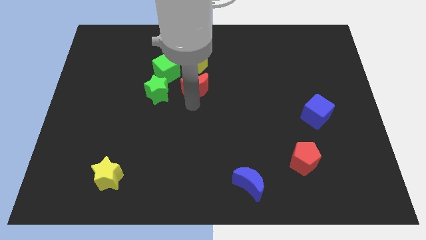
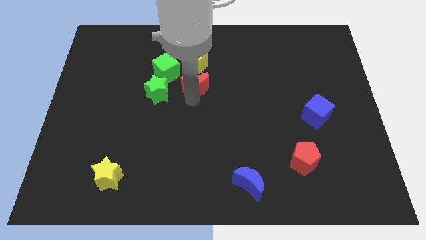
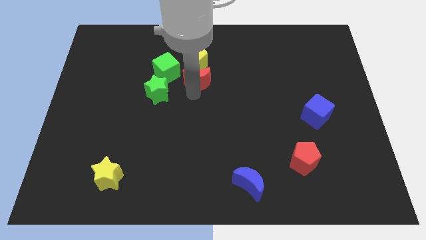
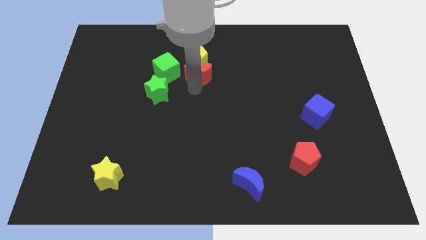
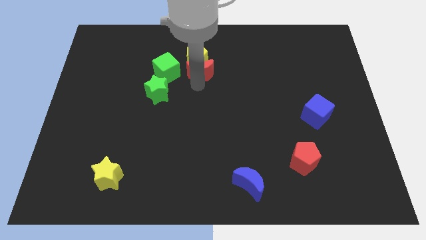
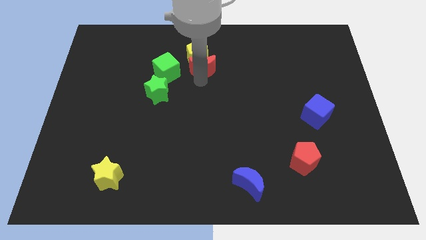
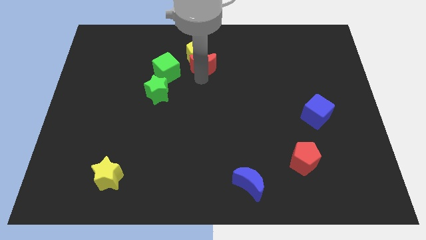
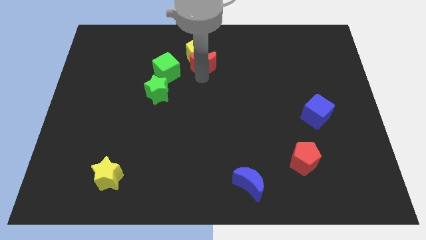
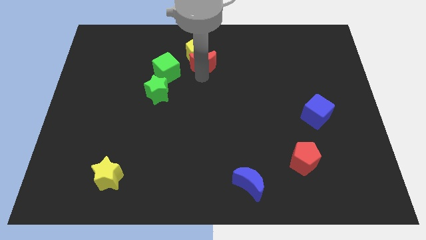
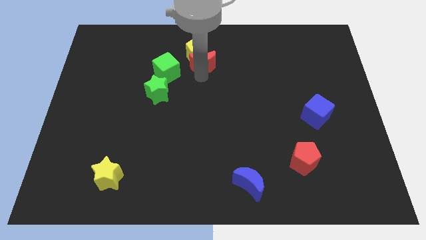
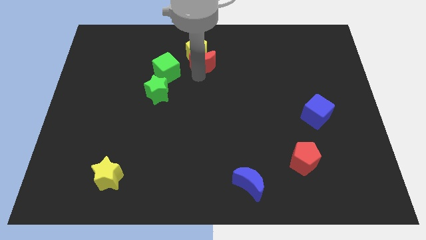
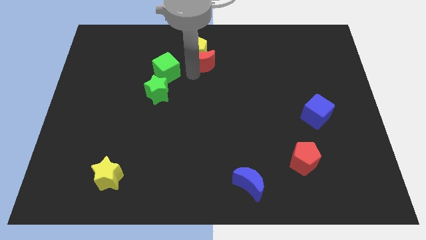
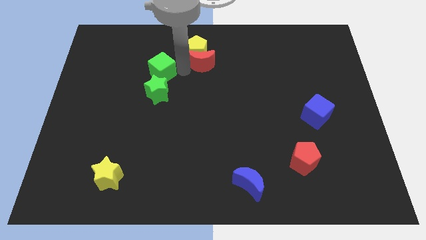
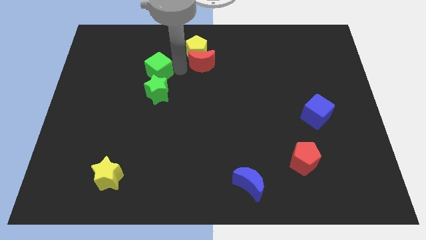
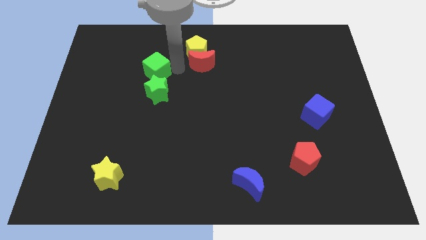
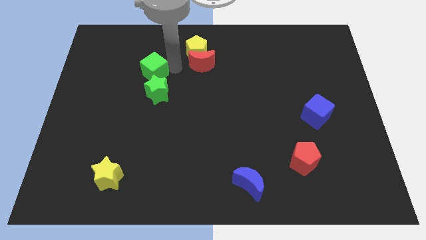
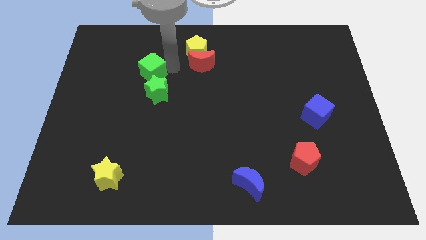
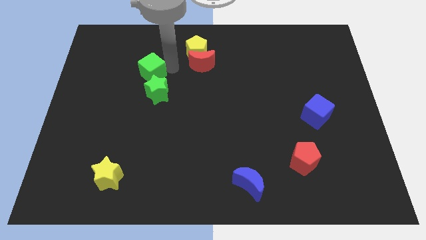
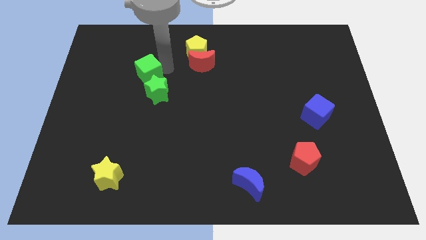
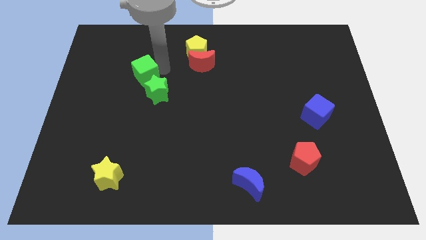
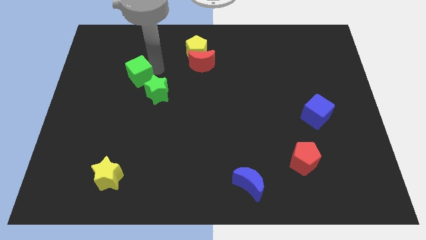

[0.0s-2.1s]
move the red moon and yellow pentagon at the top center

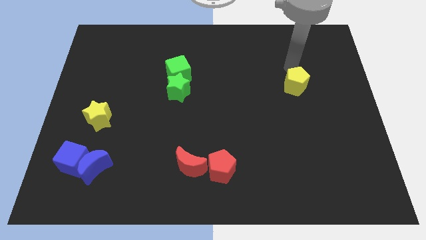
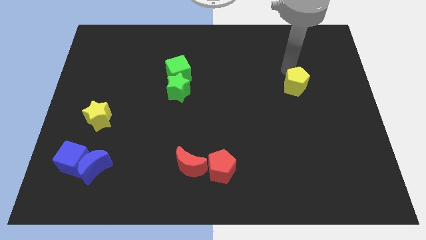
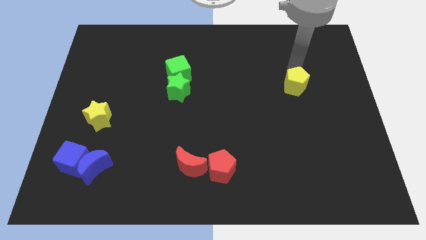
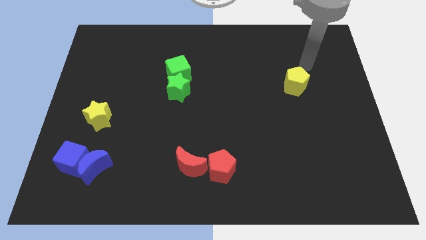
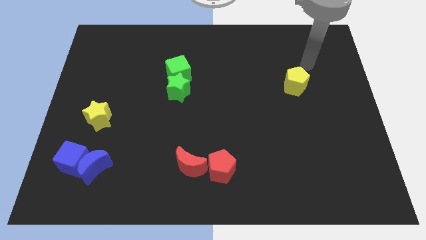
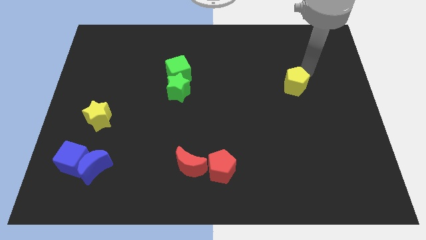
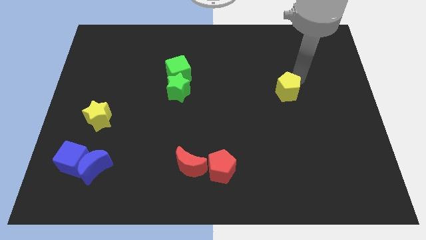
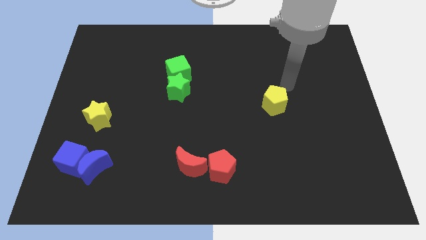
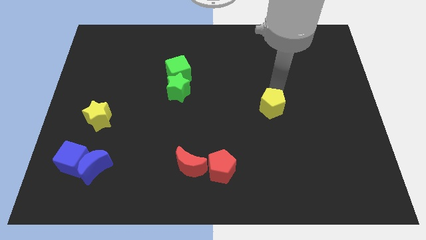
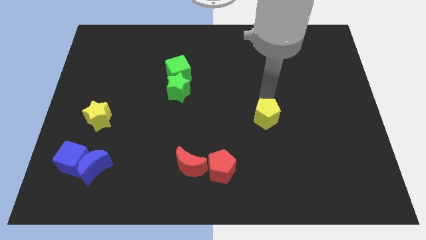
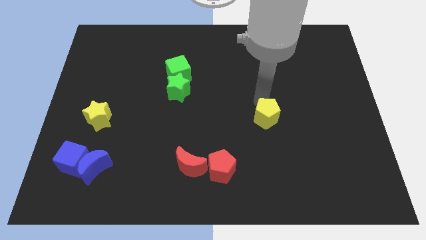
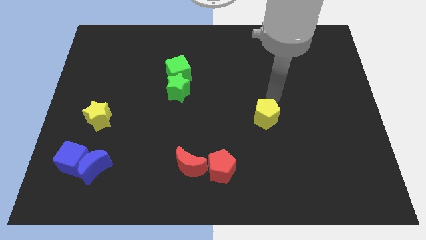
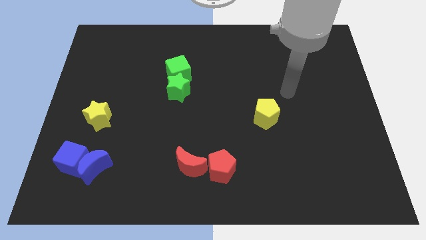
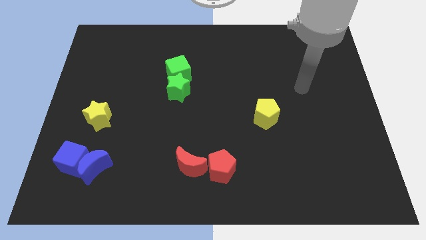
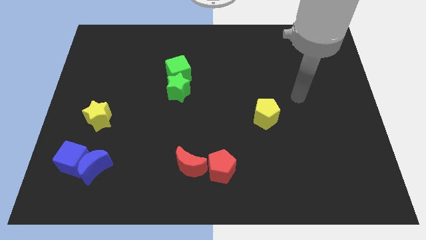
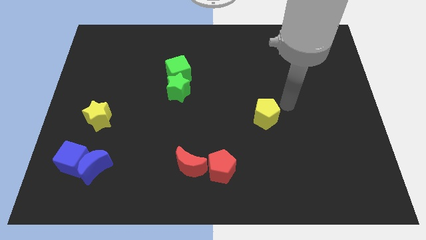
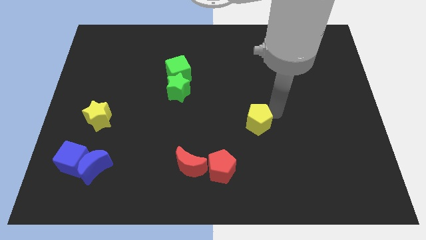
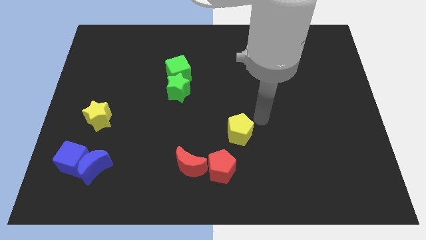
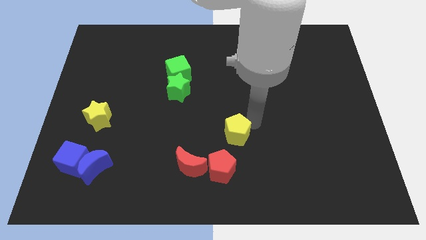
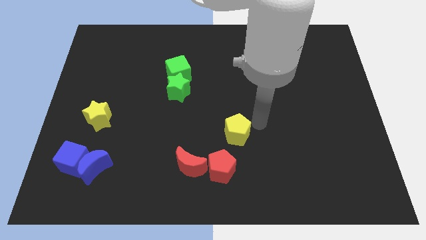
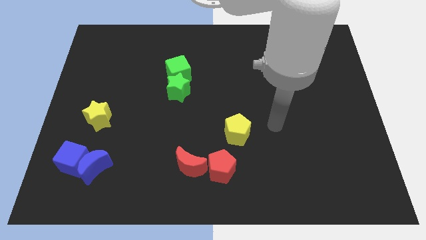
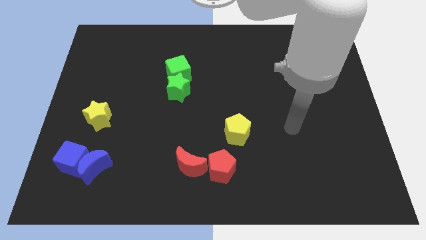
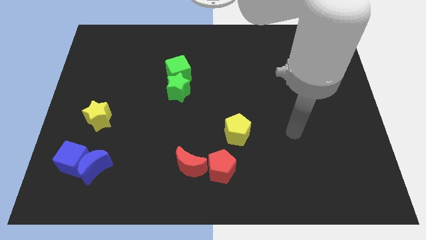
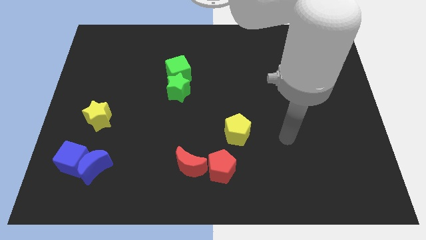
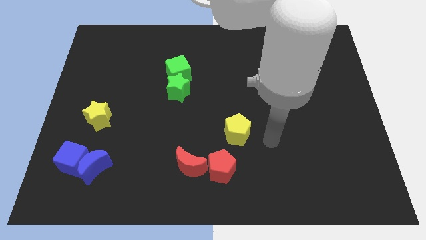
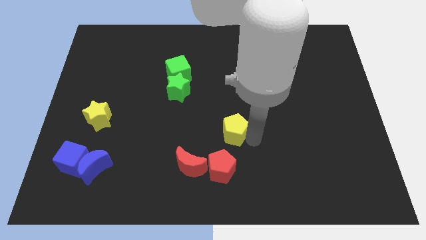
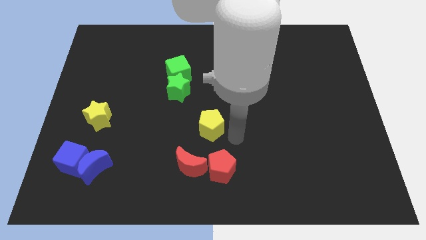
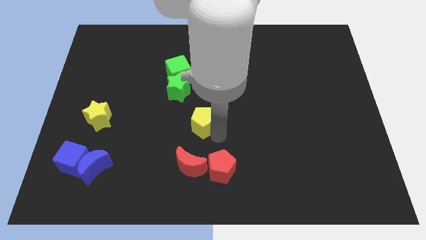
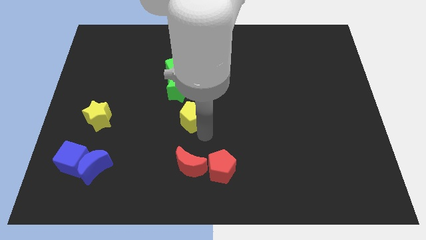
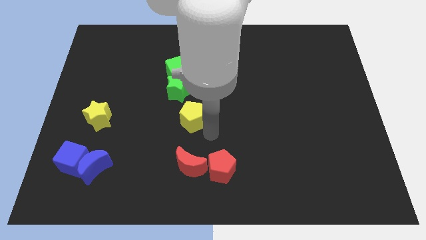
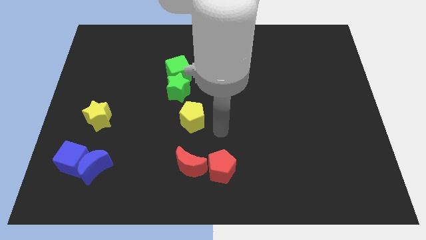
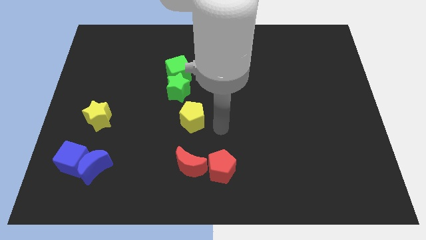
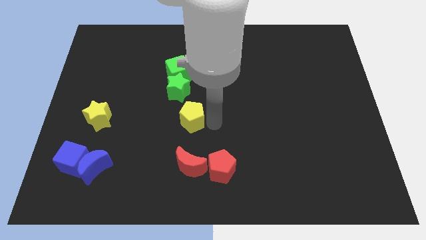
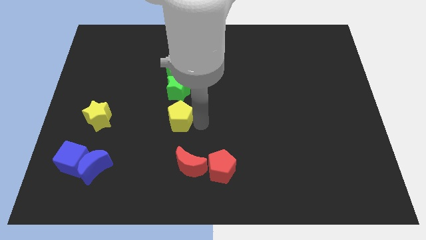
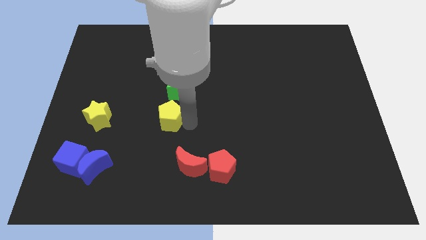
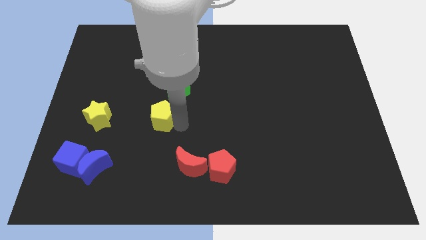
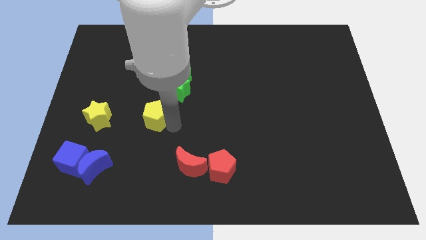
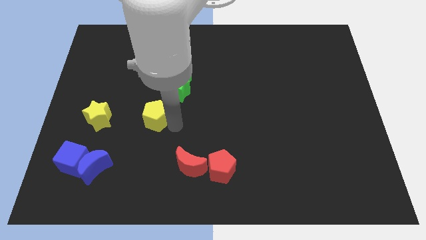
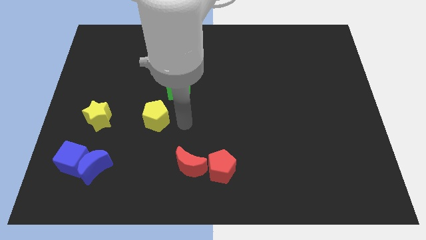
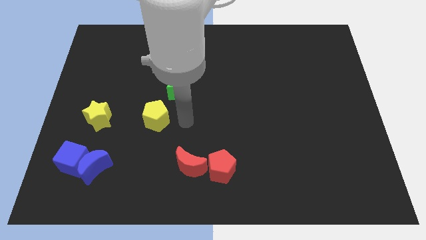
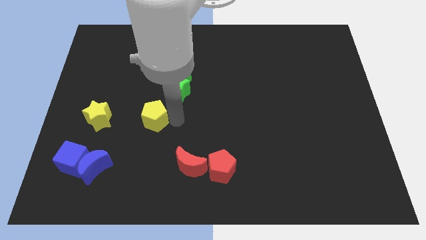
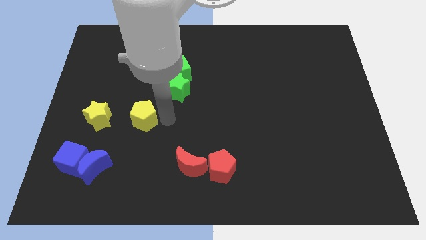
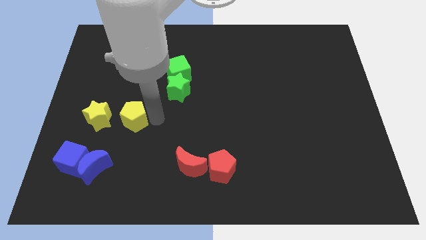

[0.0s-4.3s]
push the yellow pentagon diagonal to the right of the yellow star

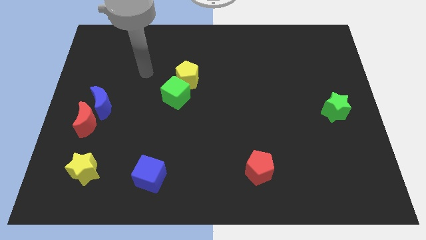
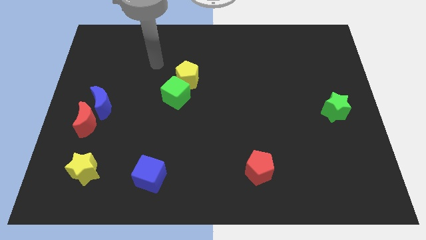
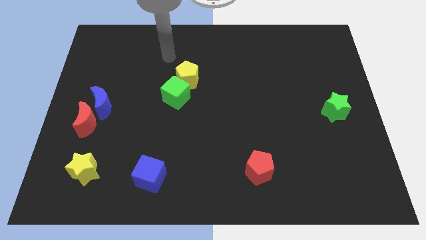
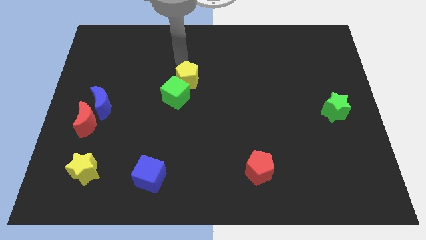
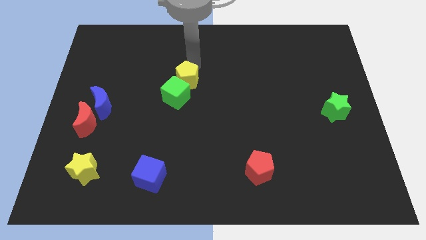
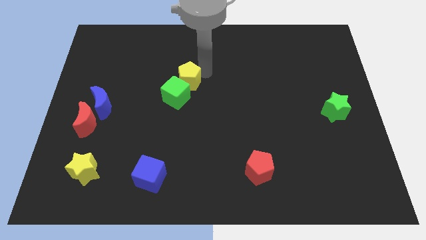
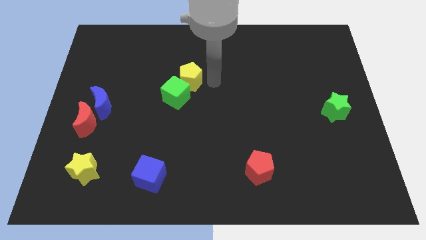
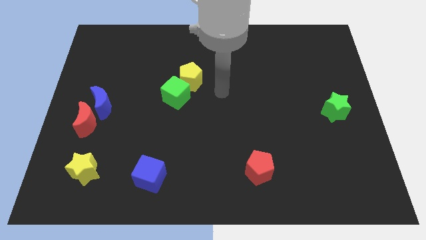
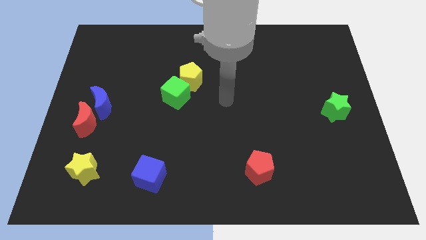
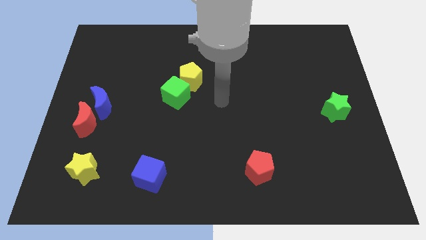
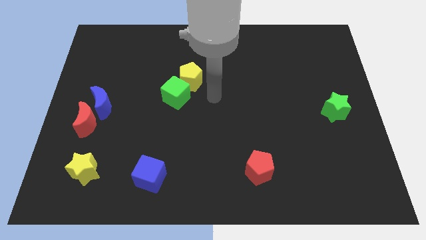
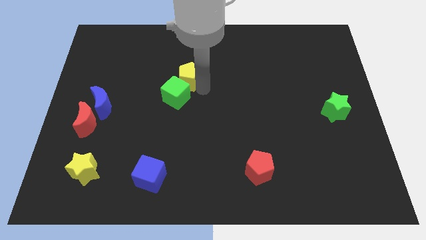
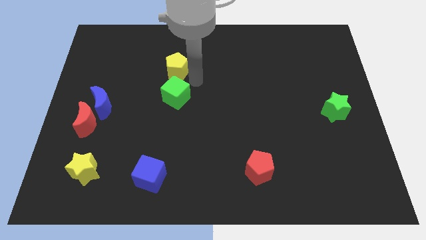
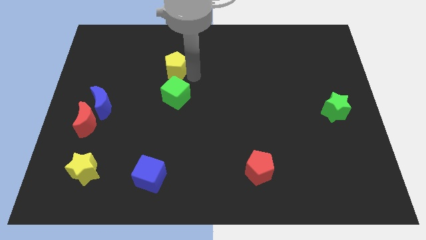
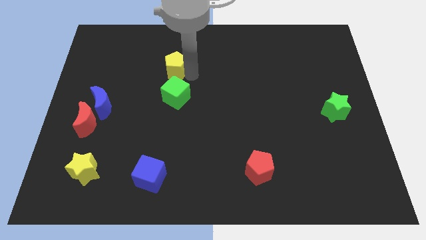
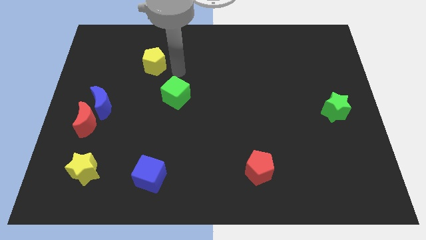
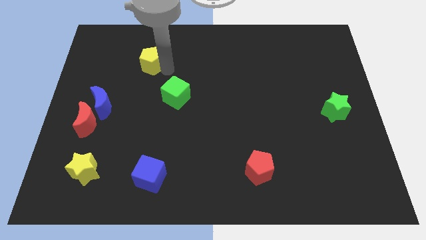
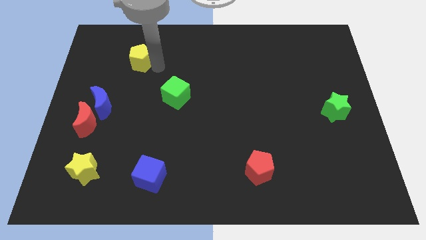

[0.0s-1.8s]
push the yellow pentagon away from the green cube

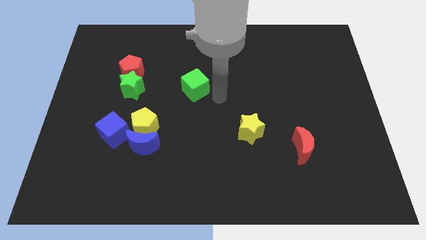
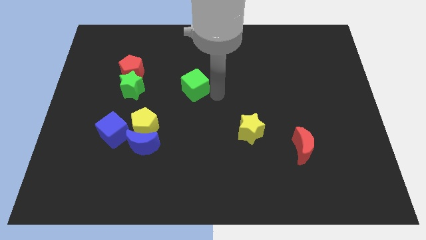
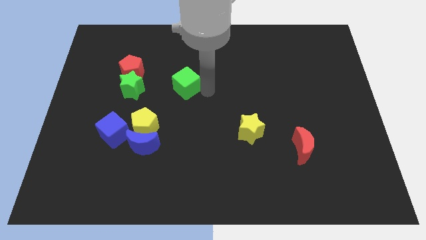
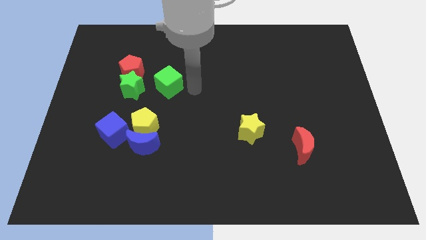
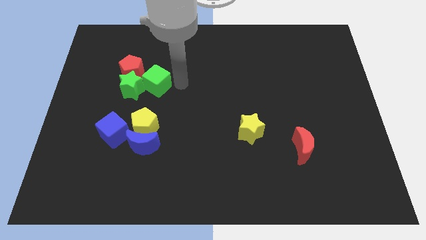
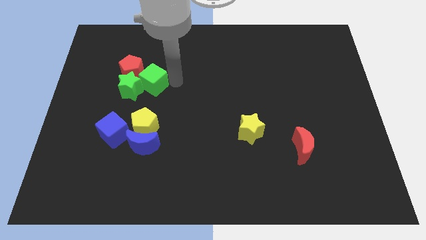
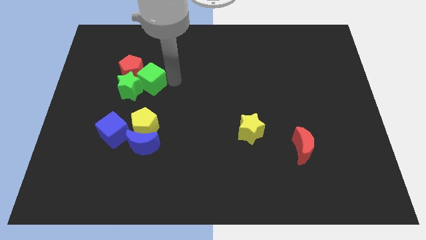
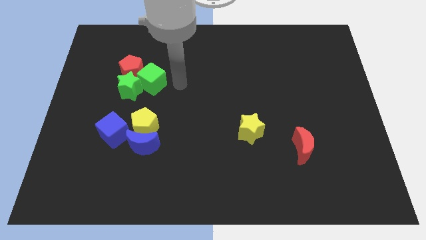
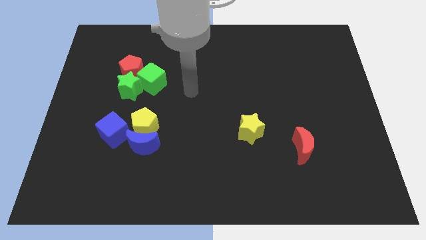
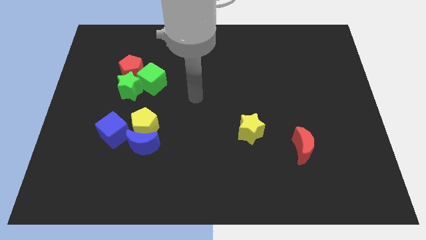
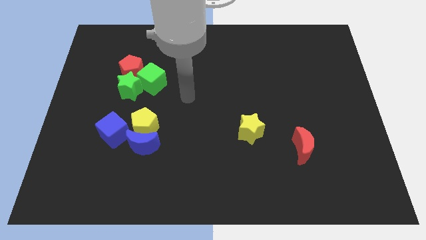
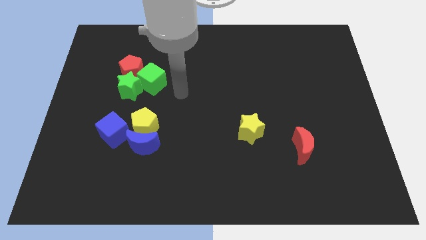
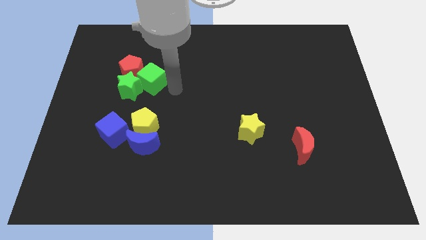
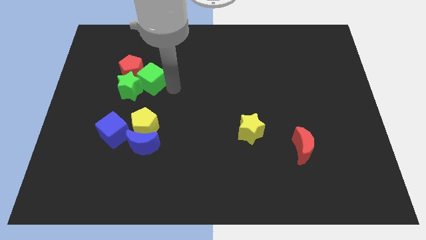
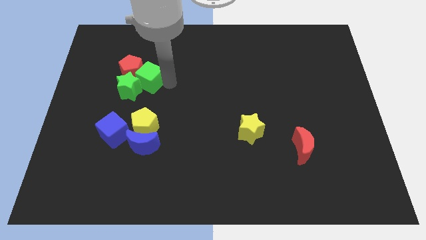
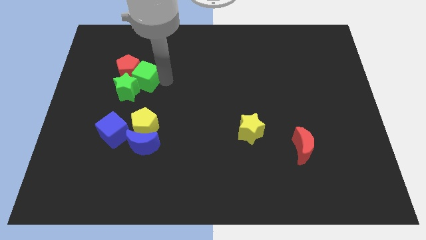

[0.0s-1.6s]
place the green cube beside the green star
